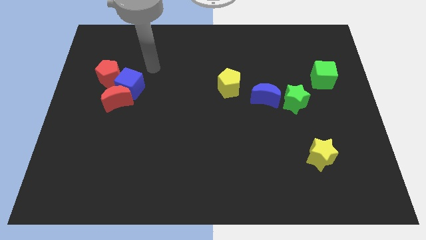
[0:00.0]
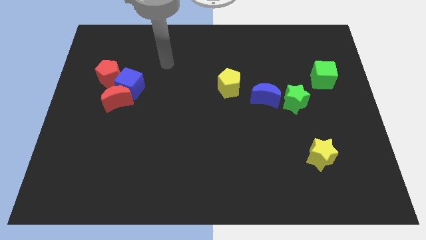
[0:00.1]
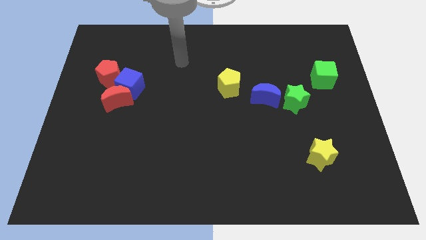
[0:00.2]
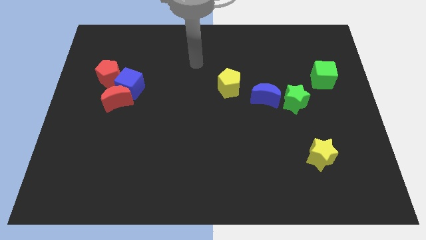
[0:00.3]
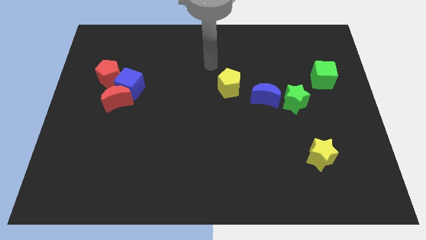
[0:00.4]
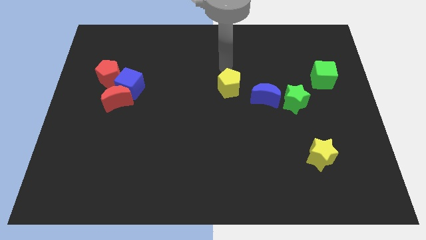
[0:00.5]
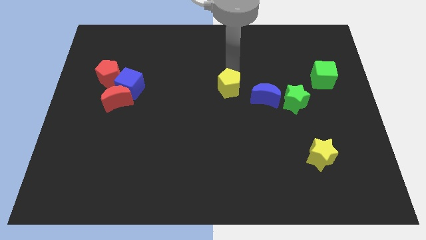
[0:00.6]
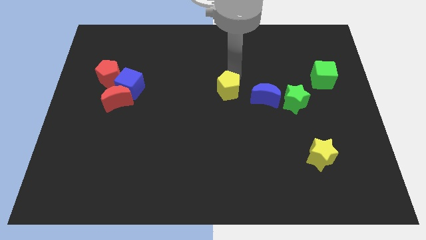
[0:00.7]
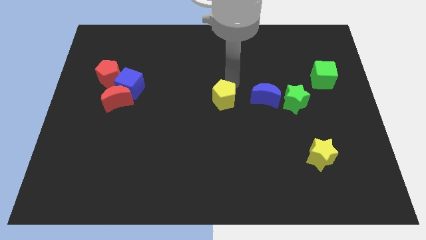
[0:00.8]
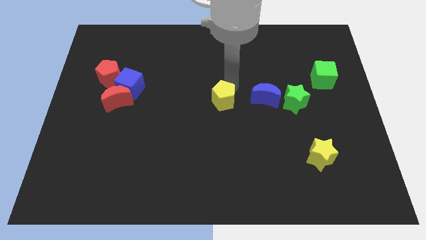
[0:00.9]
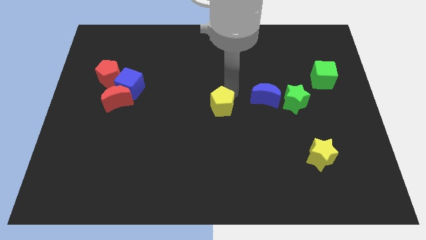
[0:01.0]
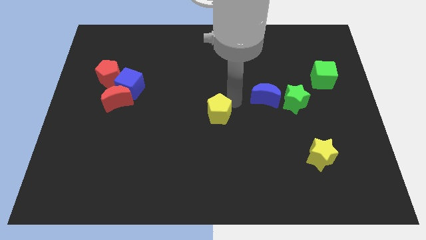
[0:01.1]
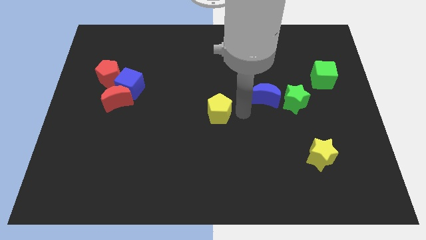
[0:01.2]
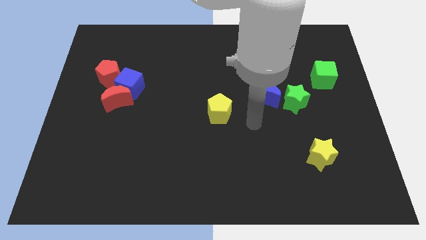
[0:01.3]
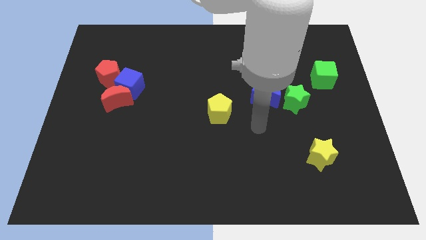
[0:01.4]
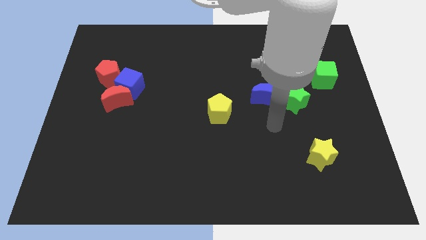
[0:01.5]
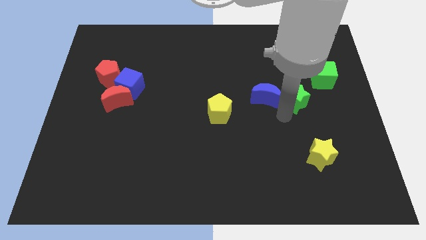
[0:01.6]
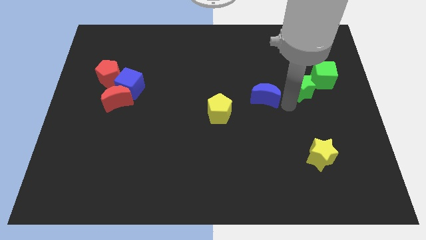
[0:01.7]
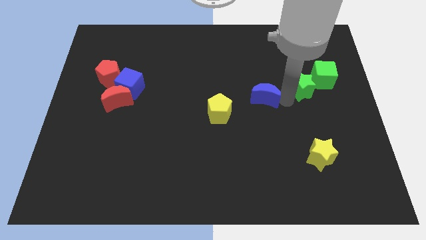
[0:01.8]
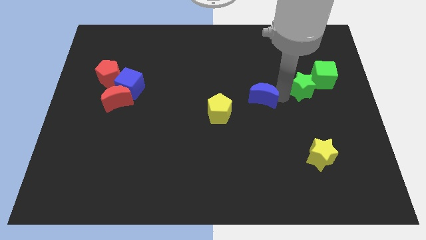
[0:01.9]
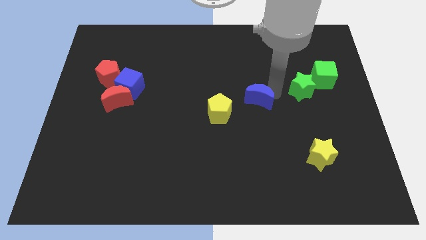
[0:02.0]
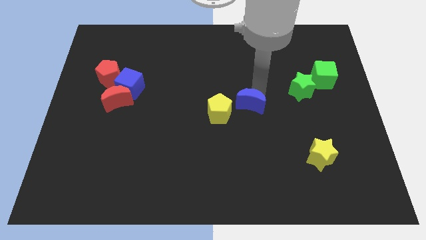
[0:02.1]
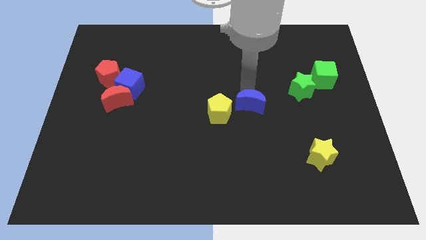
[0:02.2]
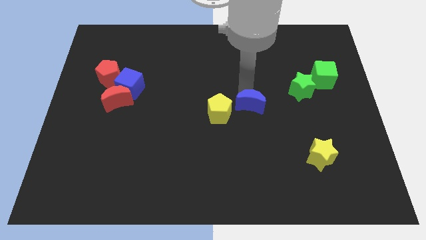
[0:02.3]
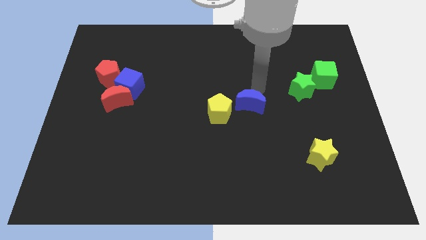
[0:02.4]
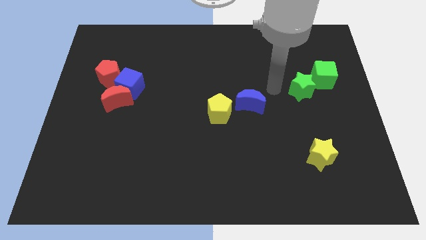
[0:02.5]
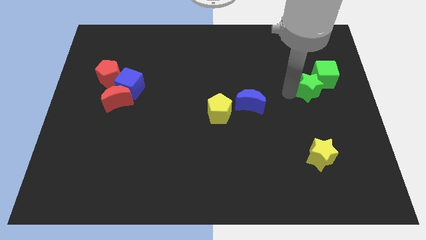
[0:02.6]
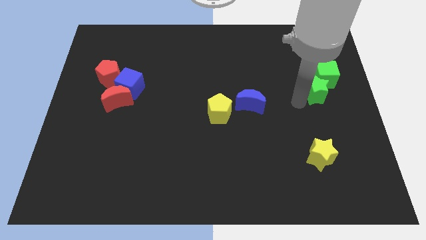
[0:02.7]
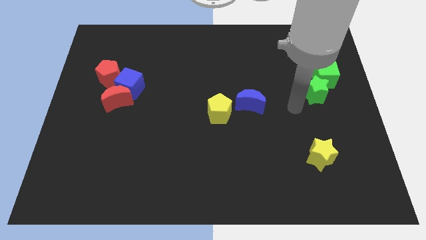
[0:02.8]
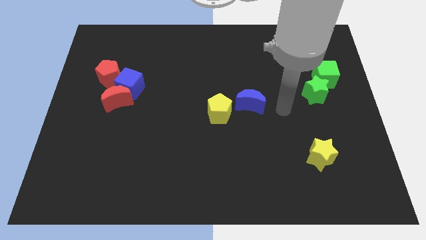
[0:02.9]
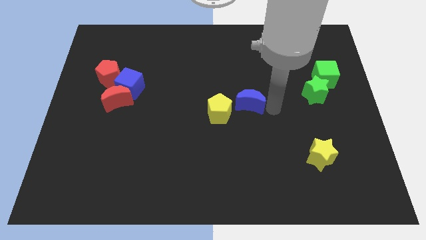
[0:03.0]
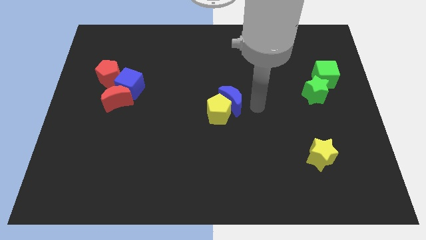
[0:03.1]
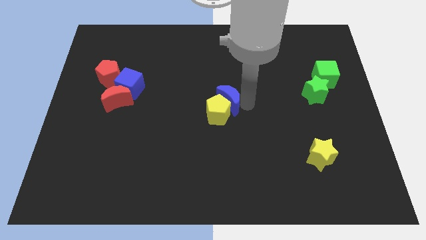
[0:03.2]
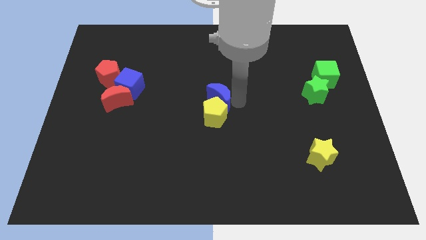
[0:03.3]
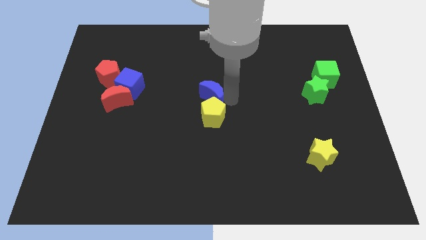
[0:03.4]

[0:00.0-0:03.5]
put the blue crescent and yellow pentagon at the center of the board

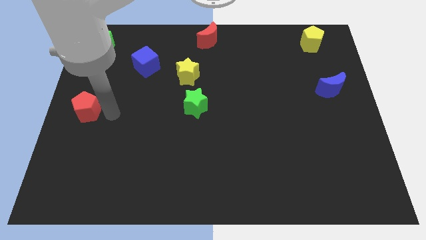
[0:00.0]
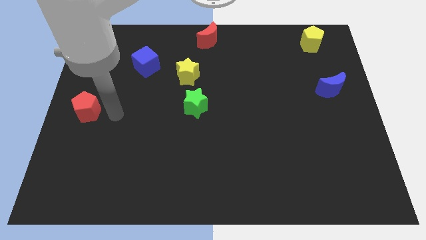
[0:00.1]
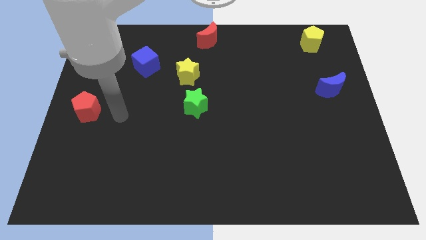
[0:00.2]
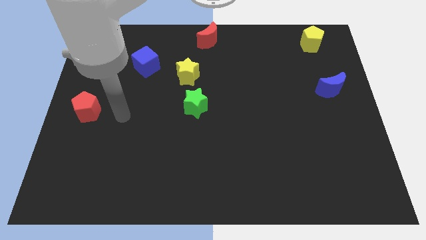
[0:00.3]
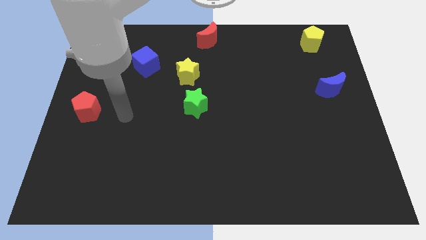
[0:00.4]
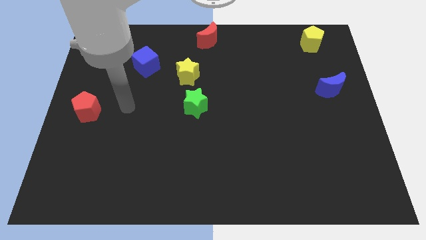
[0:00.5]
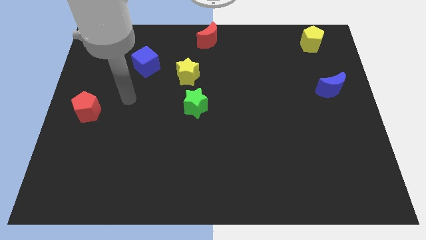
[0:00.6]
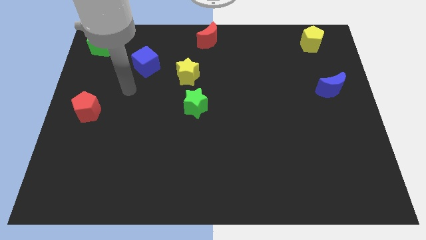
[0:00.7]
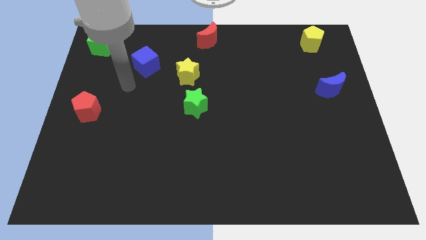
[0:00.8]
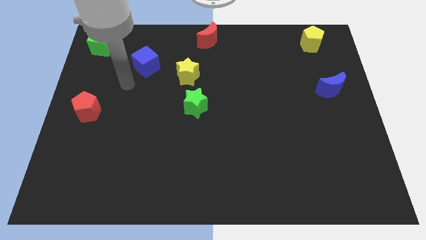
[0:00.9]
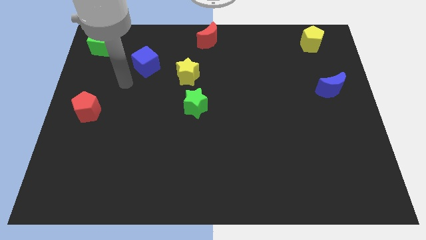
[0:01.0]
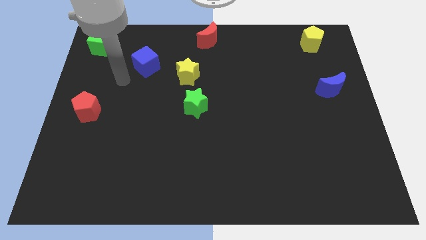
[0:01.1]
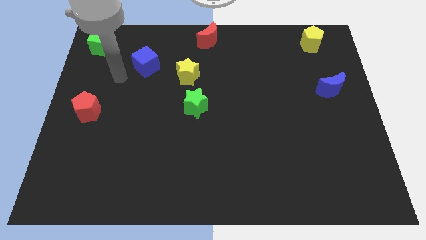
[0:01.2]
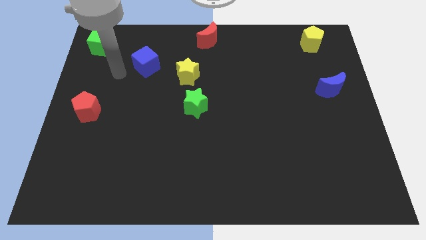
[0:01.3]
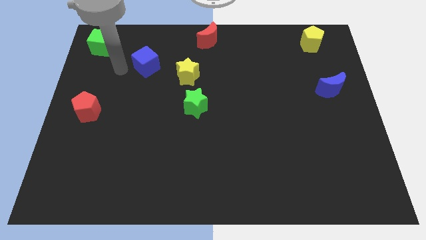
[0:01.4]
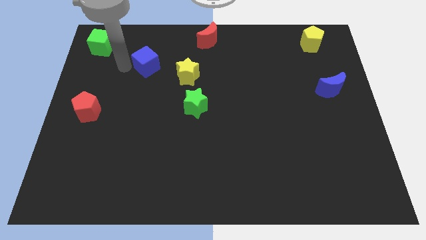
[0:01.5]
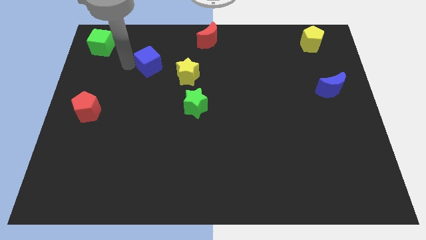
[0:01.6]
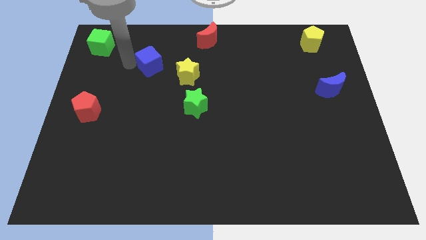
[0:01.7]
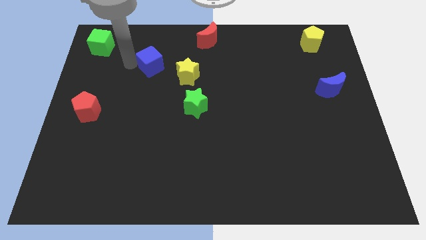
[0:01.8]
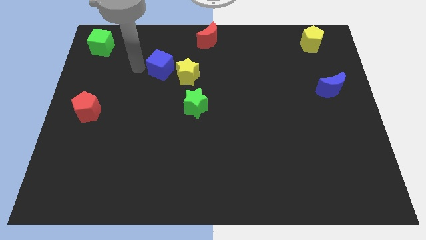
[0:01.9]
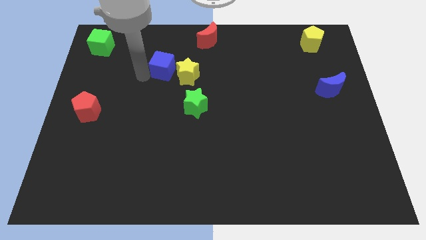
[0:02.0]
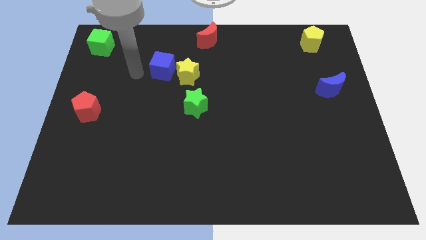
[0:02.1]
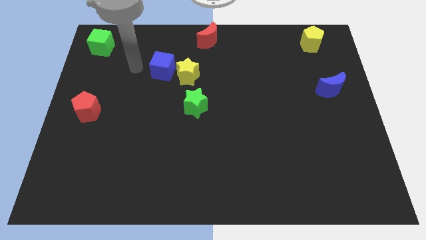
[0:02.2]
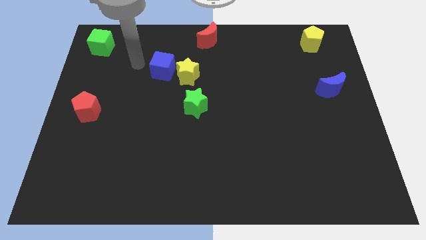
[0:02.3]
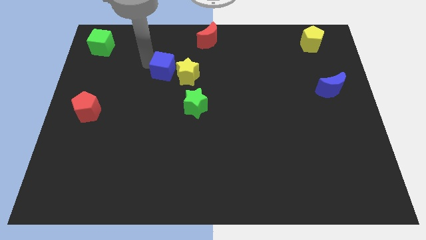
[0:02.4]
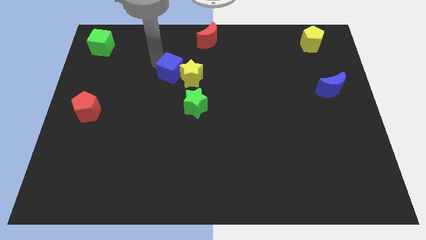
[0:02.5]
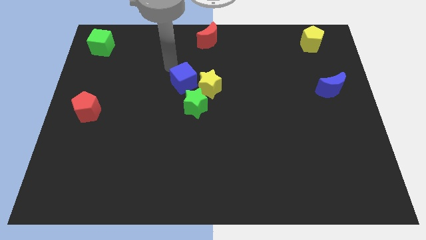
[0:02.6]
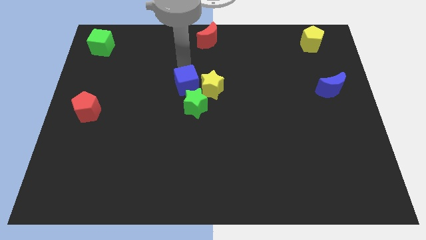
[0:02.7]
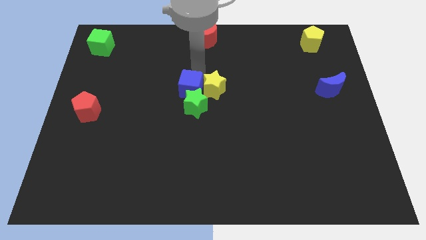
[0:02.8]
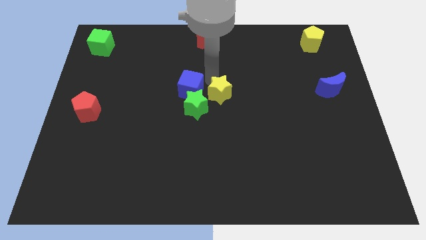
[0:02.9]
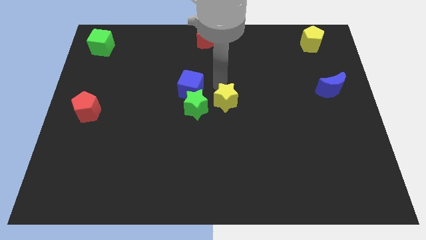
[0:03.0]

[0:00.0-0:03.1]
push the blue cube into the green star

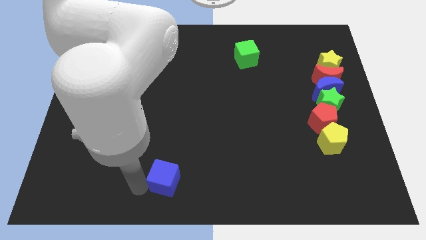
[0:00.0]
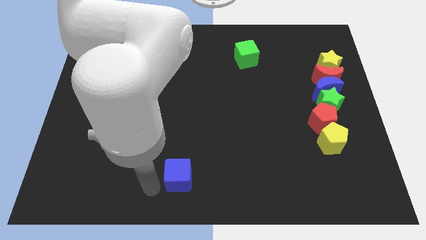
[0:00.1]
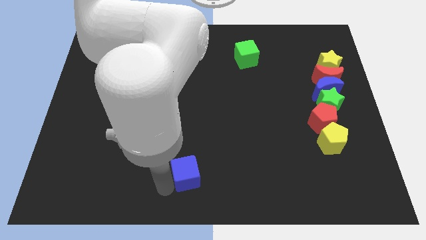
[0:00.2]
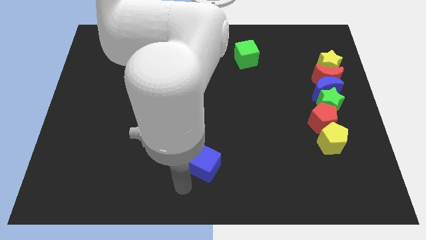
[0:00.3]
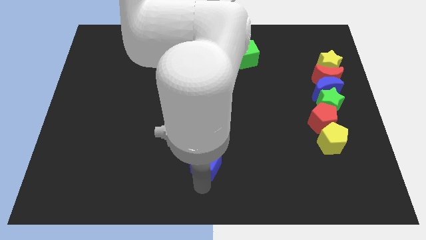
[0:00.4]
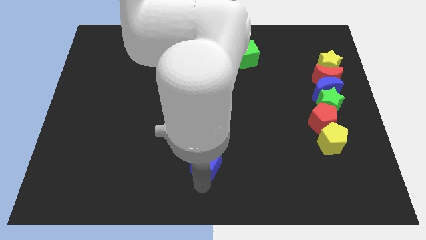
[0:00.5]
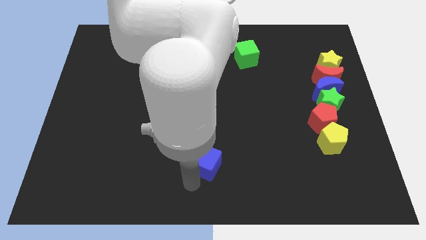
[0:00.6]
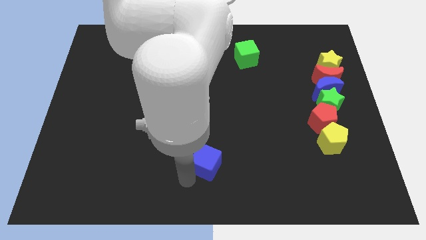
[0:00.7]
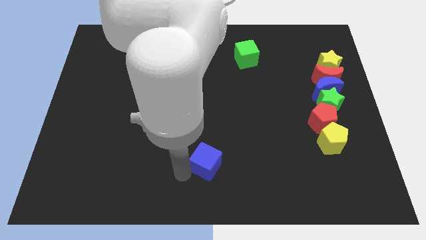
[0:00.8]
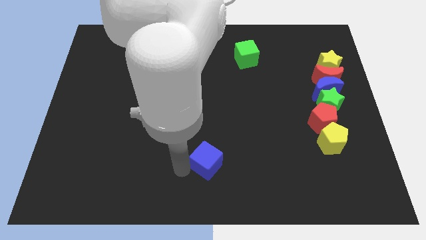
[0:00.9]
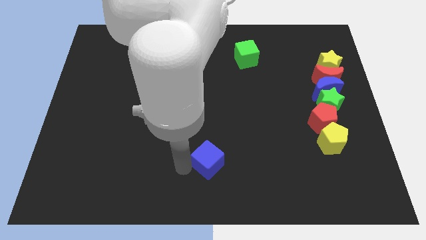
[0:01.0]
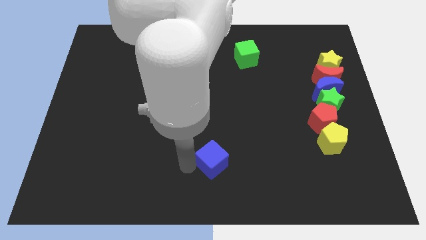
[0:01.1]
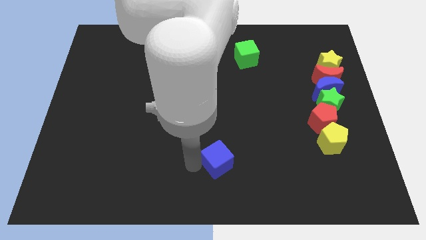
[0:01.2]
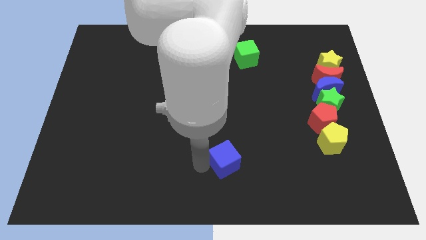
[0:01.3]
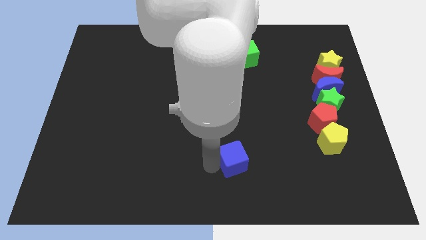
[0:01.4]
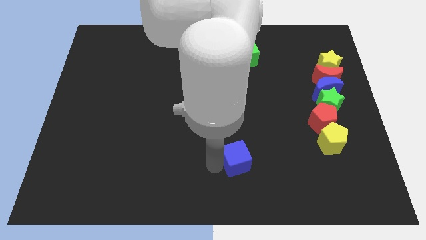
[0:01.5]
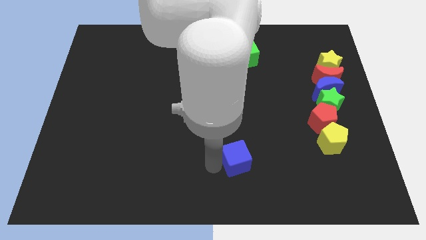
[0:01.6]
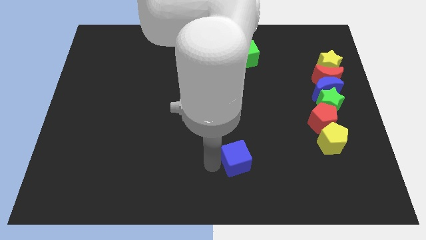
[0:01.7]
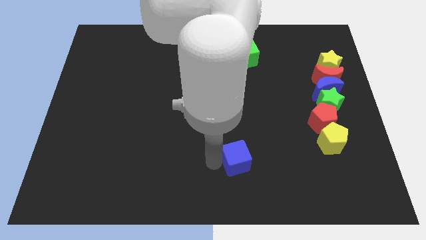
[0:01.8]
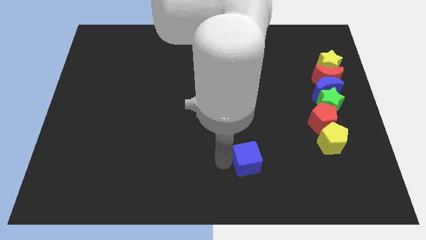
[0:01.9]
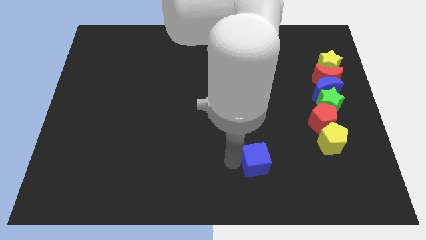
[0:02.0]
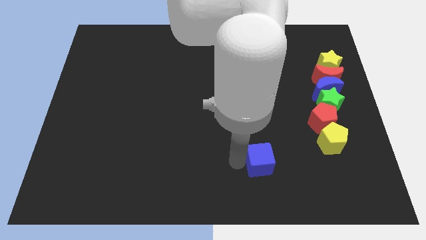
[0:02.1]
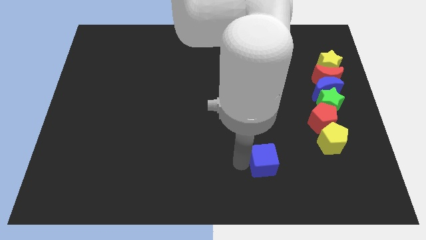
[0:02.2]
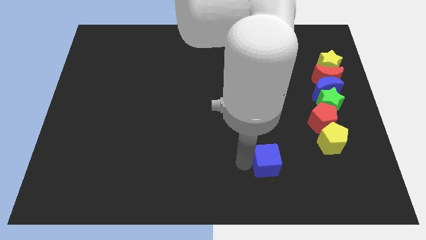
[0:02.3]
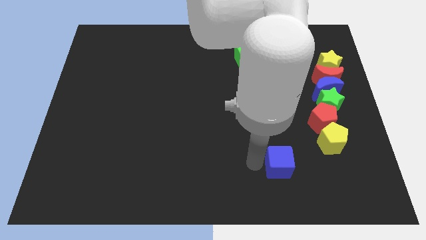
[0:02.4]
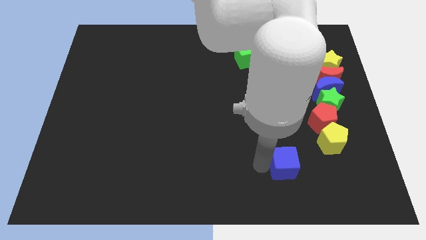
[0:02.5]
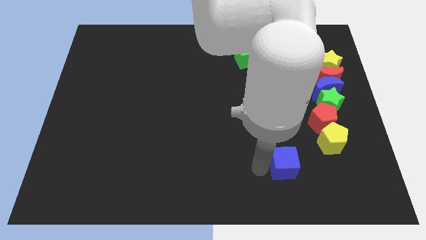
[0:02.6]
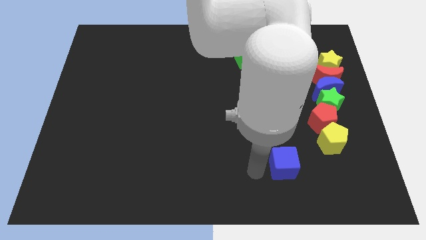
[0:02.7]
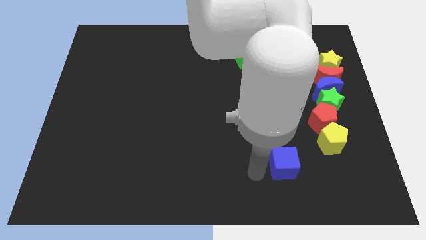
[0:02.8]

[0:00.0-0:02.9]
place the blue cube towards the yellow pentagon
